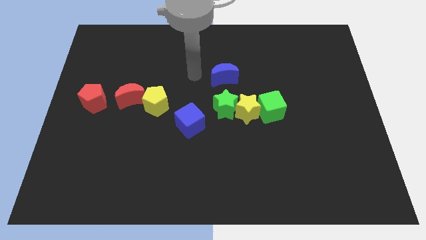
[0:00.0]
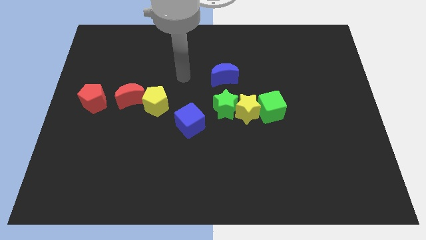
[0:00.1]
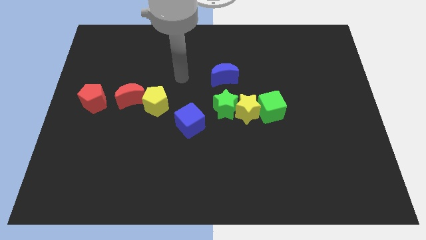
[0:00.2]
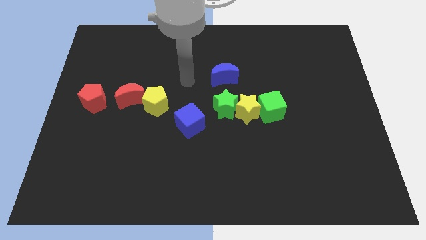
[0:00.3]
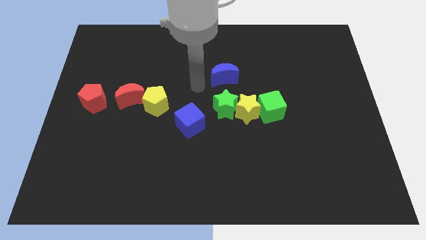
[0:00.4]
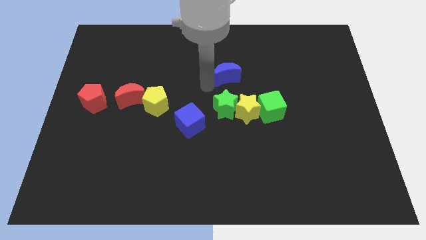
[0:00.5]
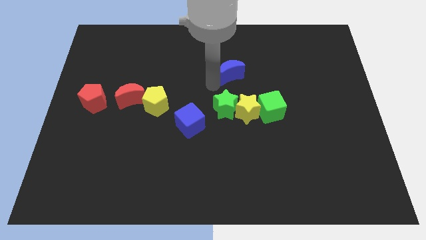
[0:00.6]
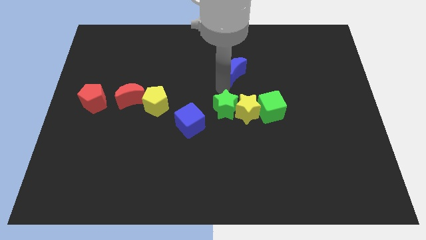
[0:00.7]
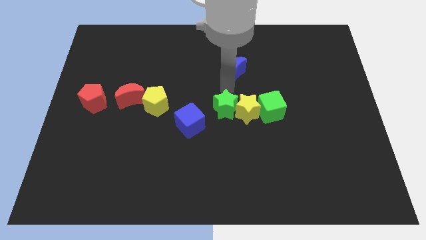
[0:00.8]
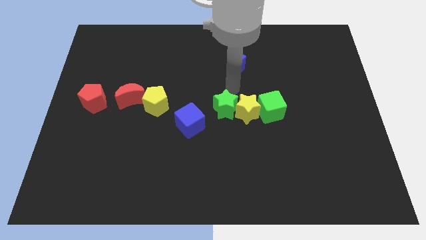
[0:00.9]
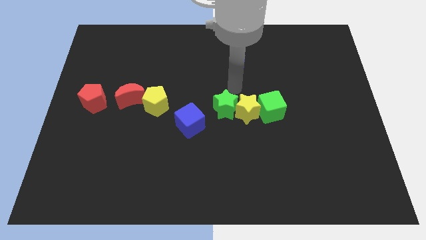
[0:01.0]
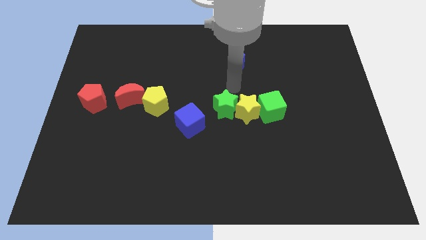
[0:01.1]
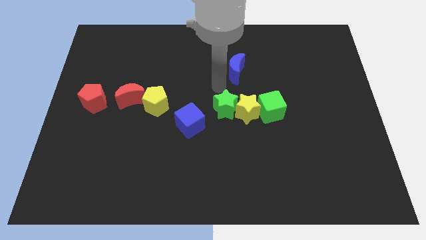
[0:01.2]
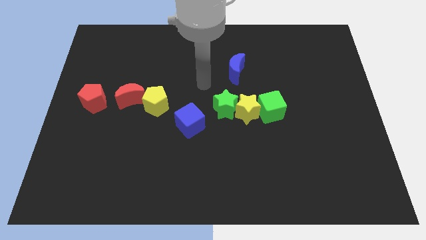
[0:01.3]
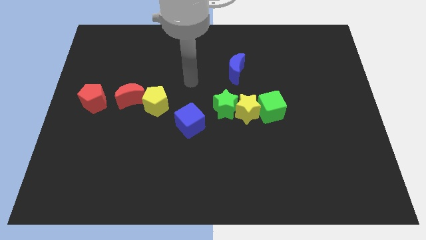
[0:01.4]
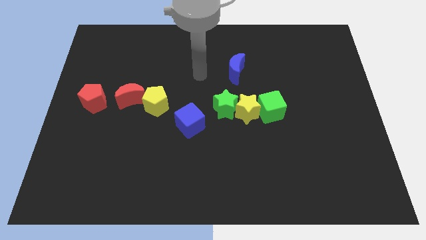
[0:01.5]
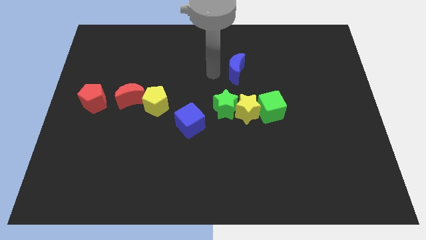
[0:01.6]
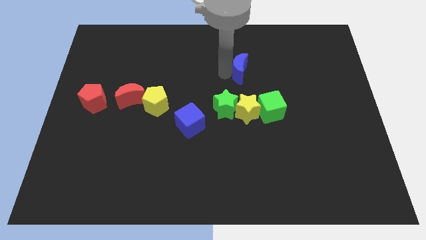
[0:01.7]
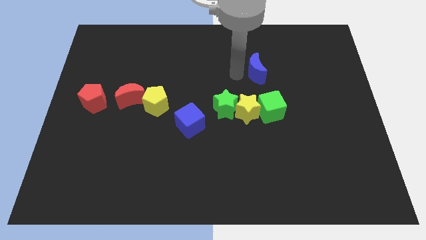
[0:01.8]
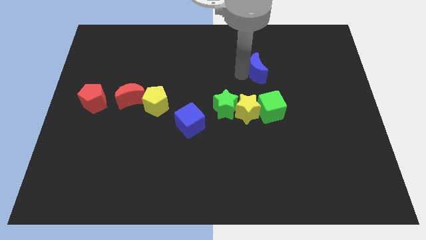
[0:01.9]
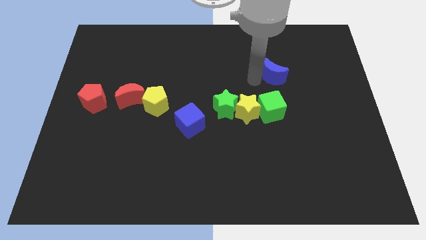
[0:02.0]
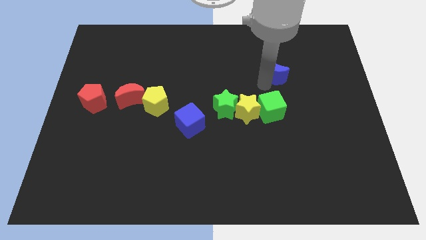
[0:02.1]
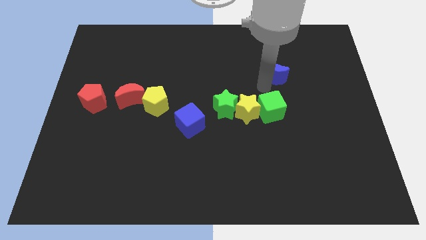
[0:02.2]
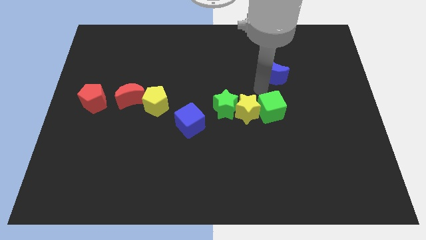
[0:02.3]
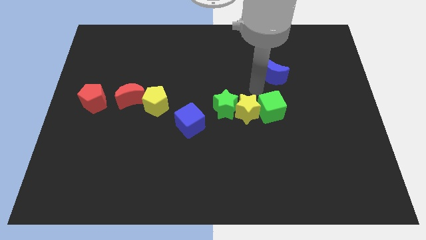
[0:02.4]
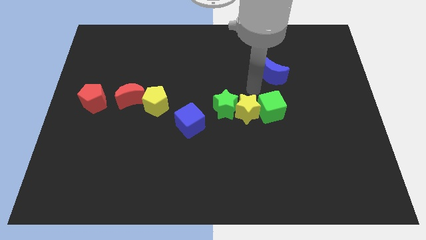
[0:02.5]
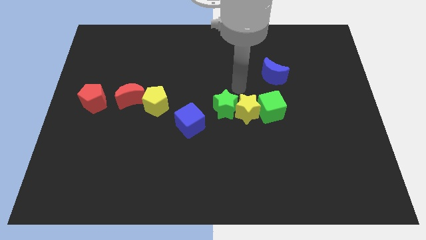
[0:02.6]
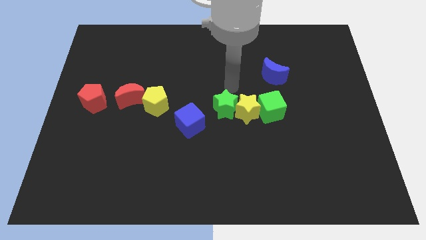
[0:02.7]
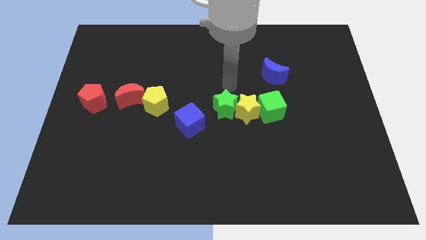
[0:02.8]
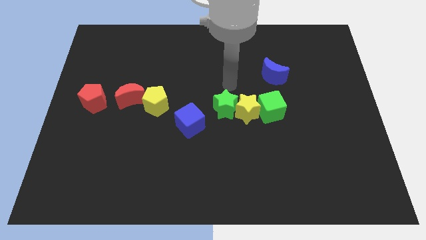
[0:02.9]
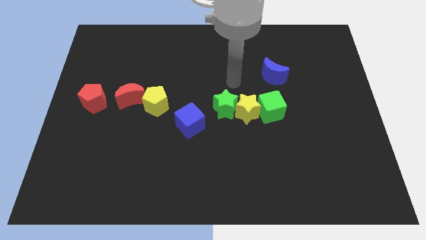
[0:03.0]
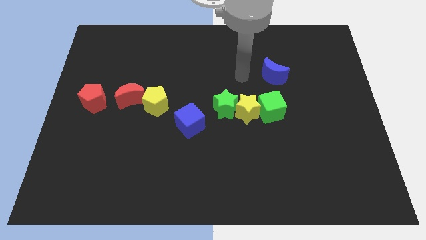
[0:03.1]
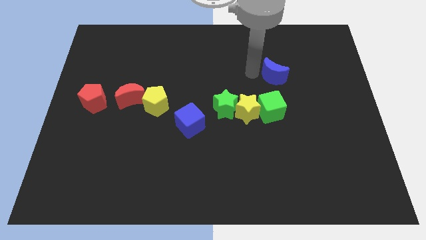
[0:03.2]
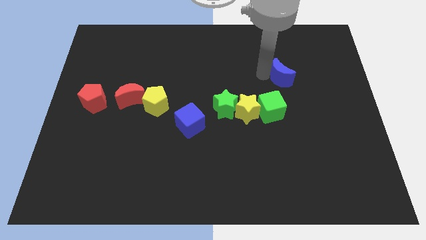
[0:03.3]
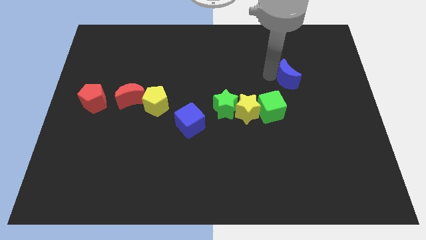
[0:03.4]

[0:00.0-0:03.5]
put the blue crescent at the top right side of green cube

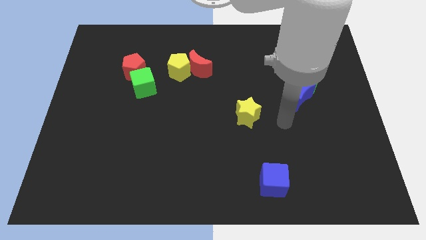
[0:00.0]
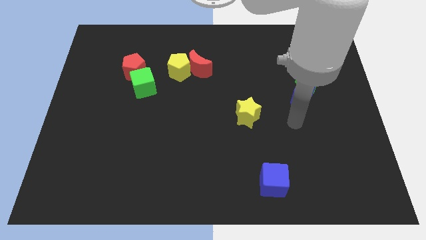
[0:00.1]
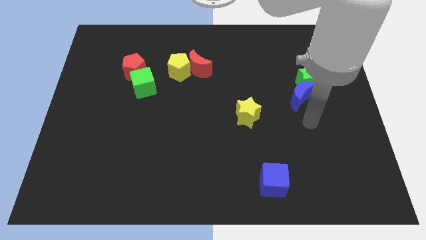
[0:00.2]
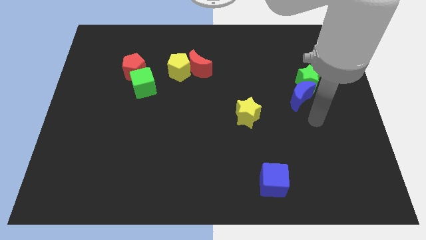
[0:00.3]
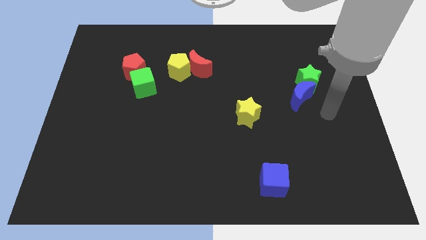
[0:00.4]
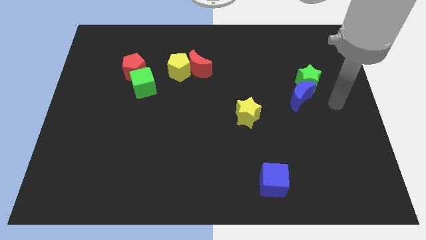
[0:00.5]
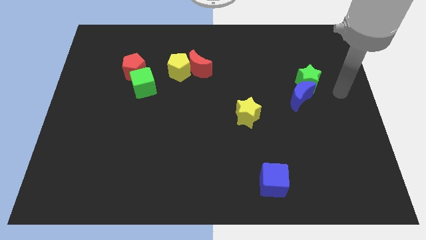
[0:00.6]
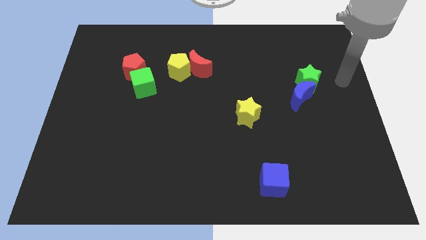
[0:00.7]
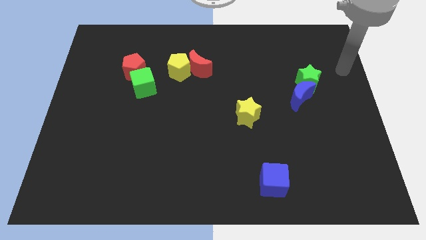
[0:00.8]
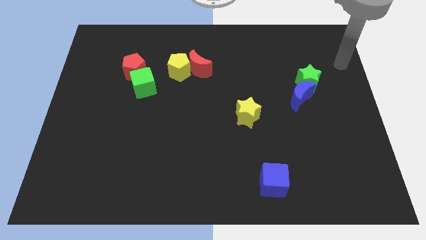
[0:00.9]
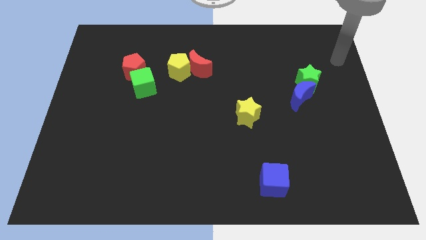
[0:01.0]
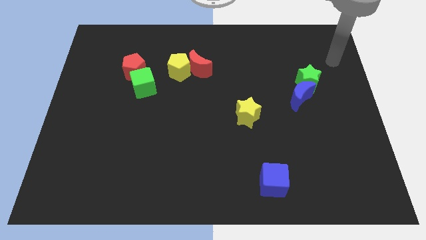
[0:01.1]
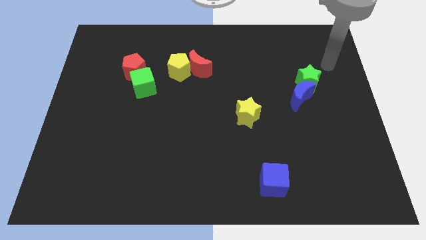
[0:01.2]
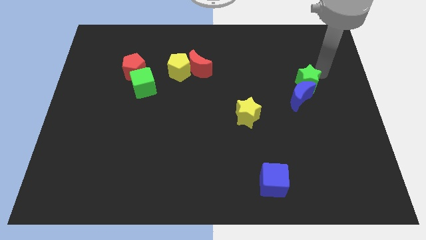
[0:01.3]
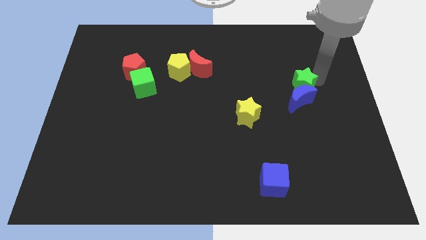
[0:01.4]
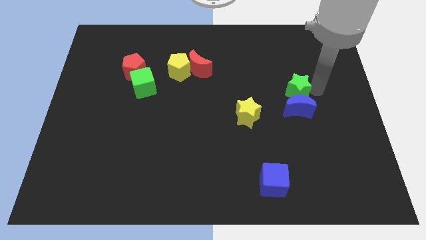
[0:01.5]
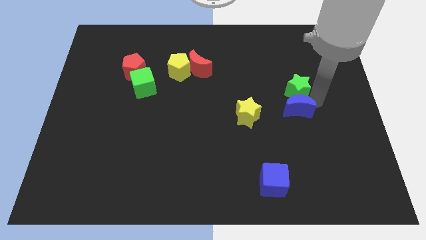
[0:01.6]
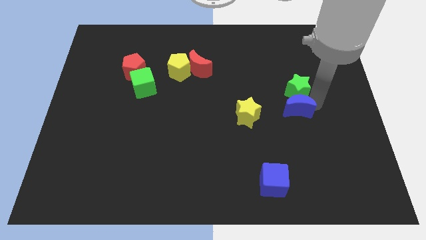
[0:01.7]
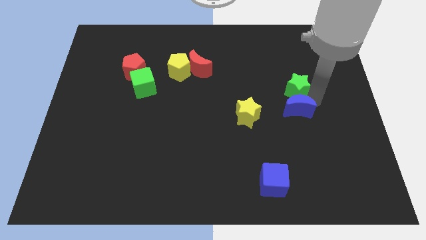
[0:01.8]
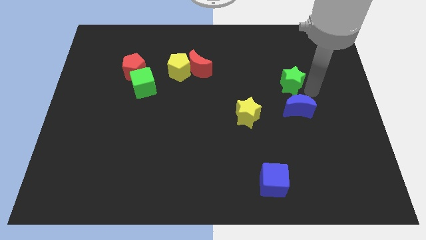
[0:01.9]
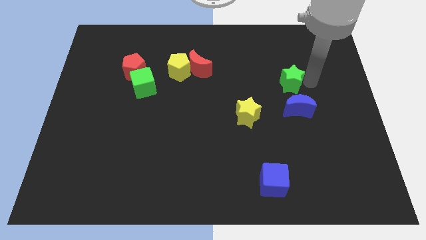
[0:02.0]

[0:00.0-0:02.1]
separate the green star from the blue crescent

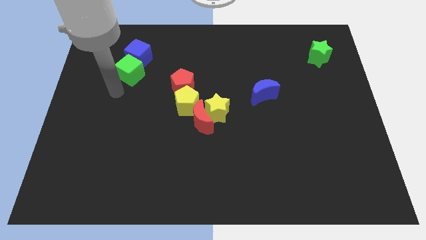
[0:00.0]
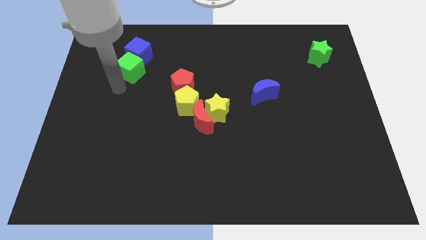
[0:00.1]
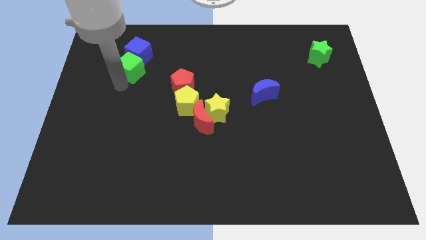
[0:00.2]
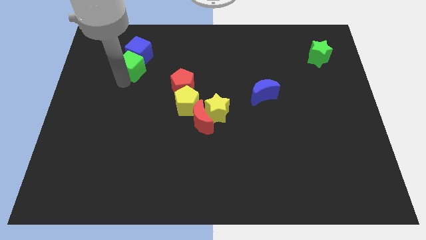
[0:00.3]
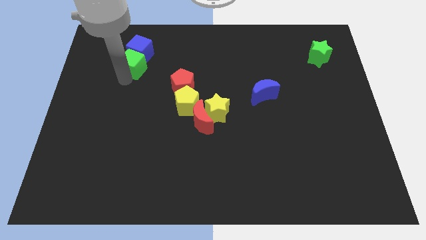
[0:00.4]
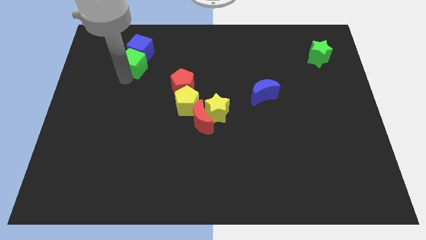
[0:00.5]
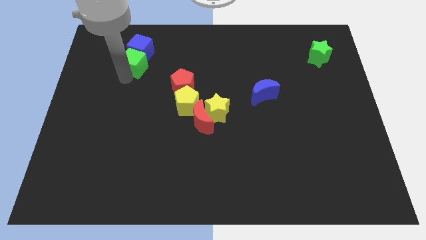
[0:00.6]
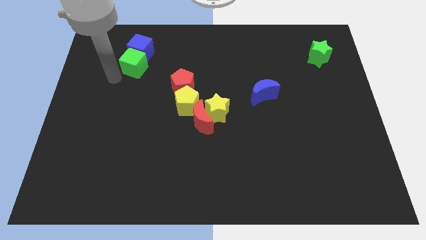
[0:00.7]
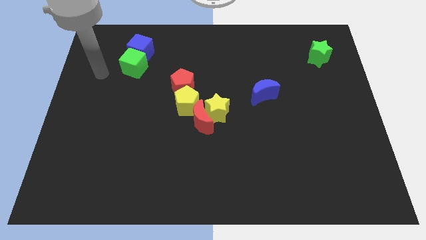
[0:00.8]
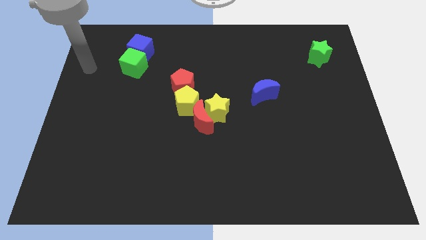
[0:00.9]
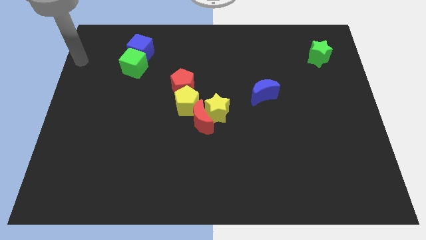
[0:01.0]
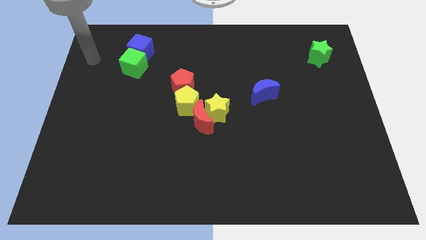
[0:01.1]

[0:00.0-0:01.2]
push the blue cube and green cube to the top side of the board

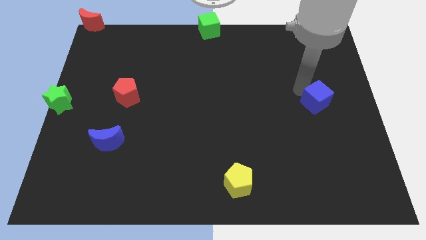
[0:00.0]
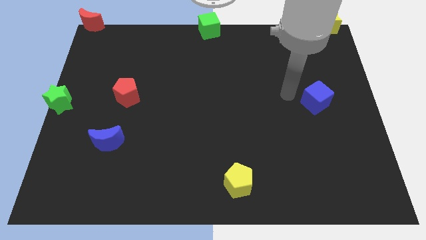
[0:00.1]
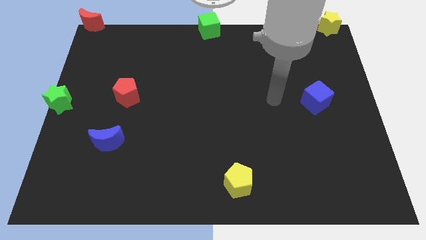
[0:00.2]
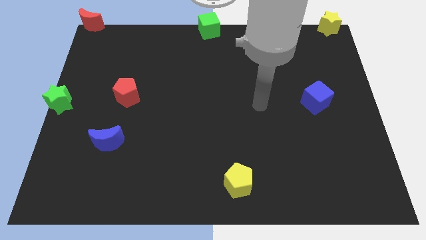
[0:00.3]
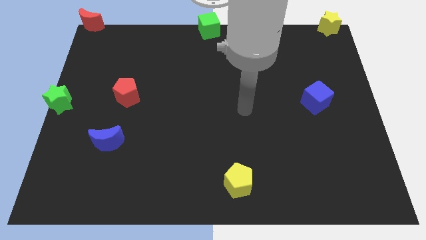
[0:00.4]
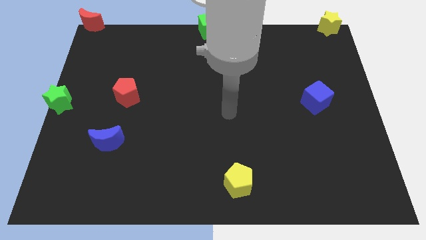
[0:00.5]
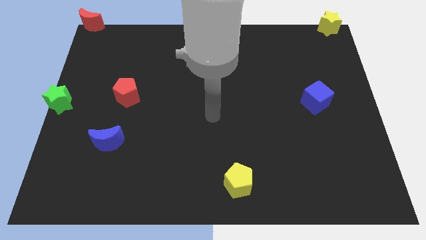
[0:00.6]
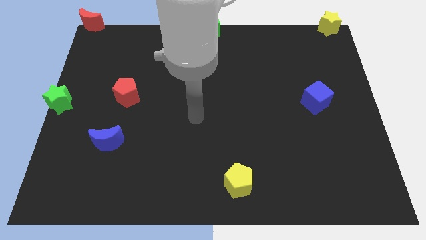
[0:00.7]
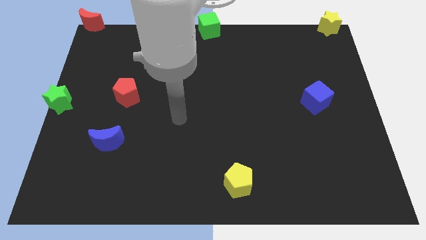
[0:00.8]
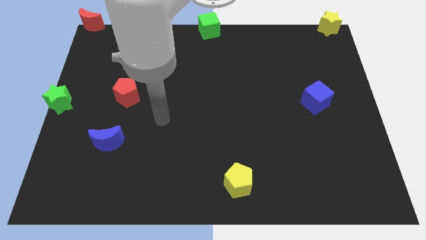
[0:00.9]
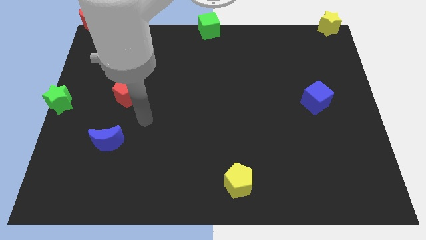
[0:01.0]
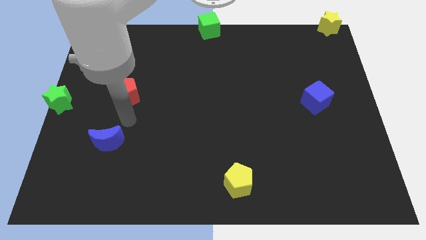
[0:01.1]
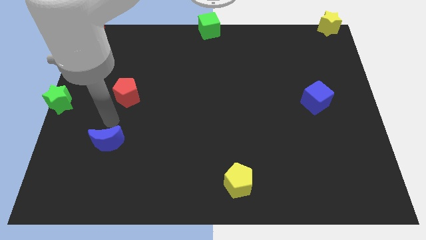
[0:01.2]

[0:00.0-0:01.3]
move your arm to the top of the blue crescent

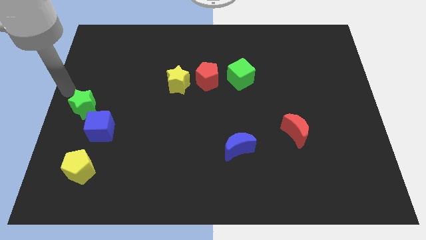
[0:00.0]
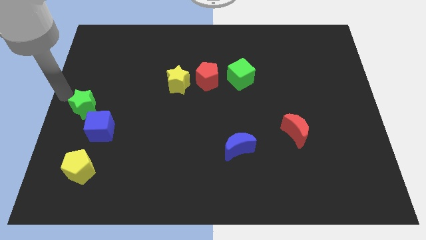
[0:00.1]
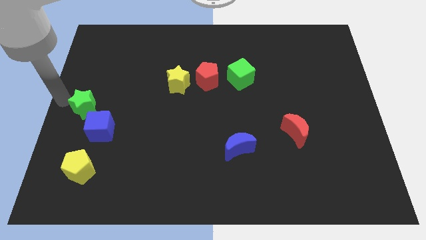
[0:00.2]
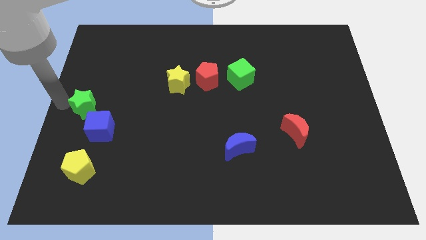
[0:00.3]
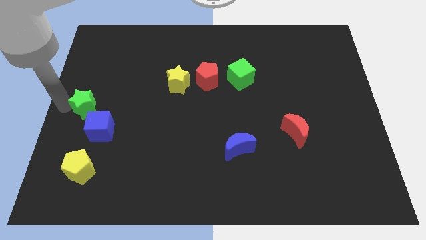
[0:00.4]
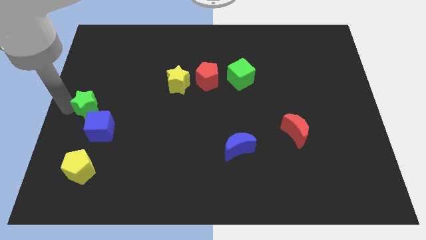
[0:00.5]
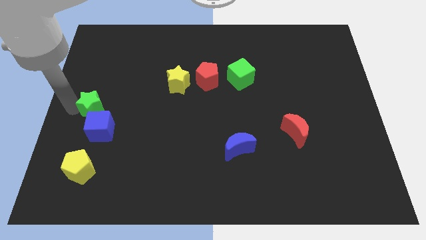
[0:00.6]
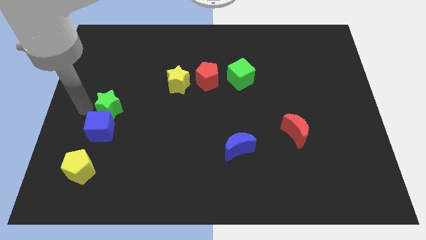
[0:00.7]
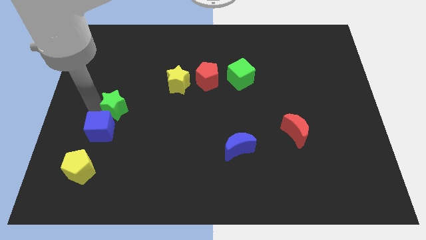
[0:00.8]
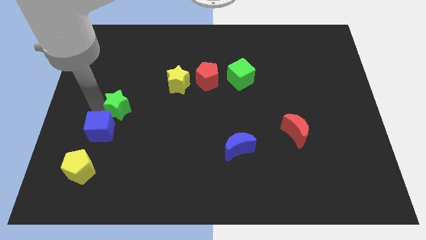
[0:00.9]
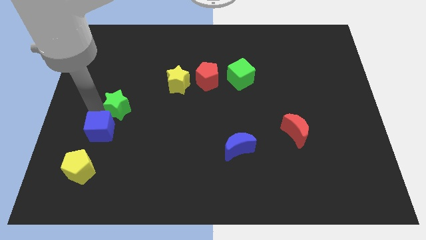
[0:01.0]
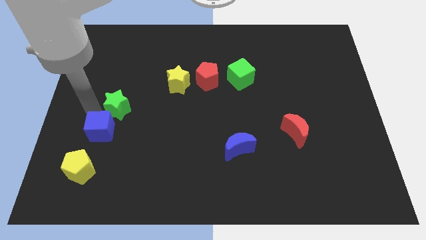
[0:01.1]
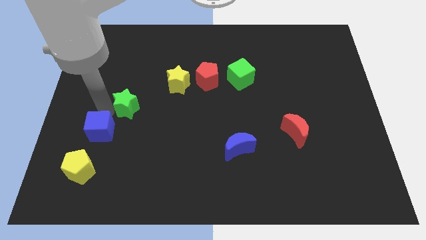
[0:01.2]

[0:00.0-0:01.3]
slide the green star diagonally right to the blue cube
